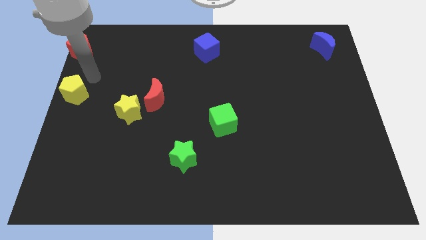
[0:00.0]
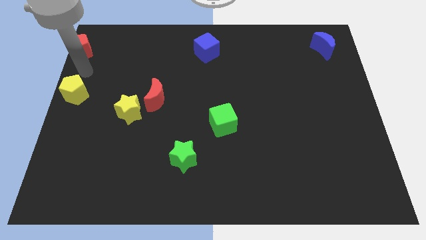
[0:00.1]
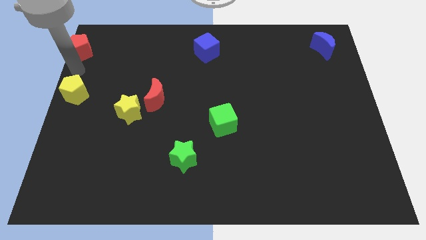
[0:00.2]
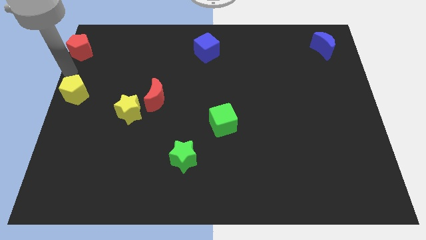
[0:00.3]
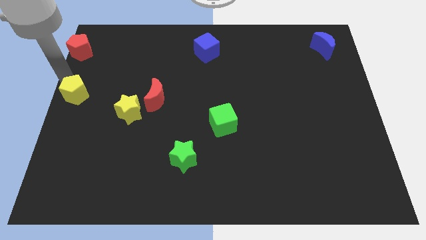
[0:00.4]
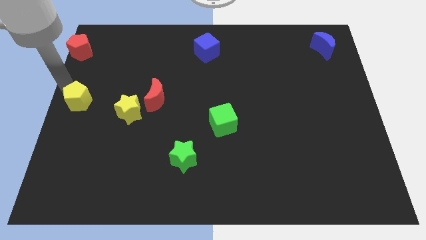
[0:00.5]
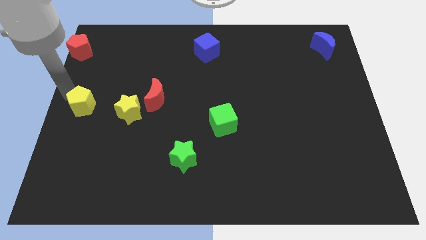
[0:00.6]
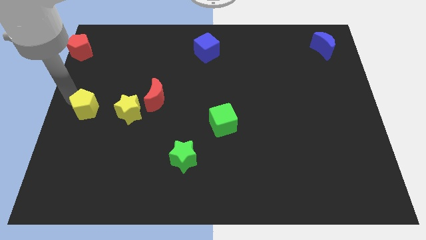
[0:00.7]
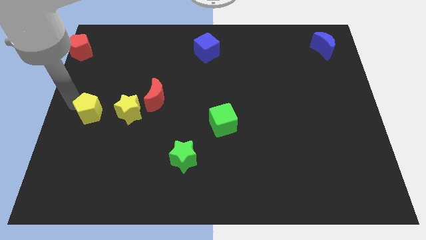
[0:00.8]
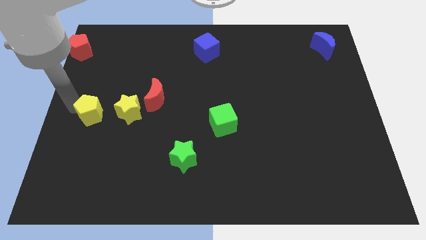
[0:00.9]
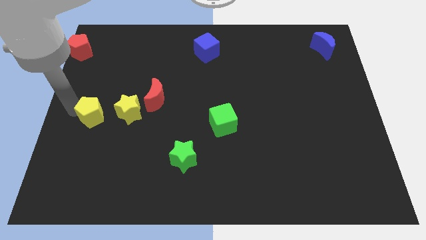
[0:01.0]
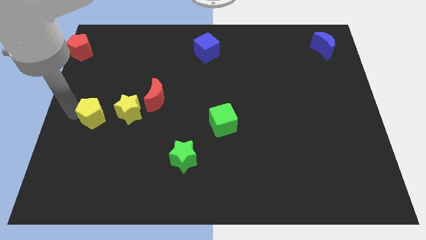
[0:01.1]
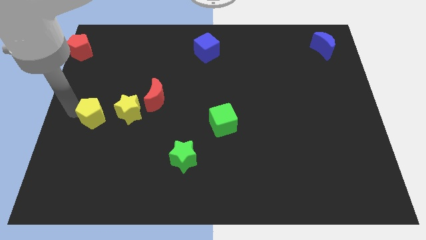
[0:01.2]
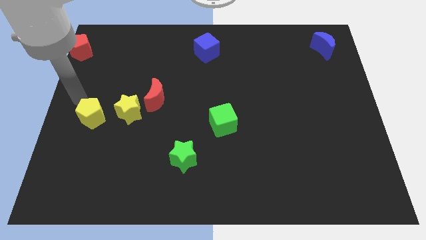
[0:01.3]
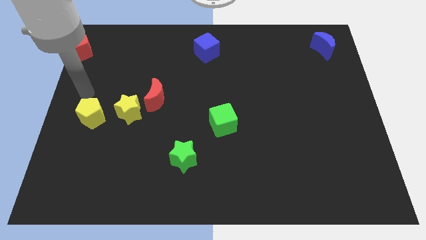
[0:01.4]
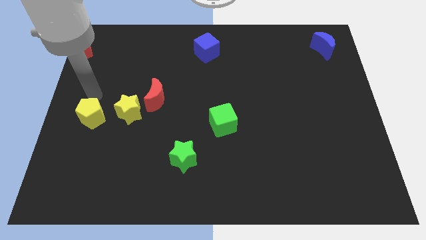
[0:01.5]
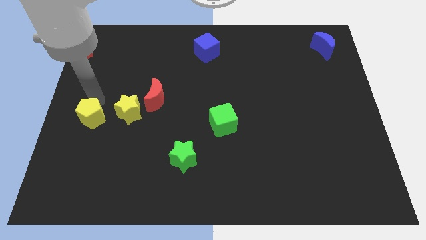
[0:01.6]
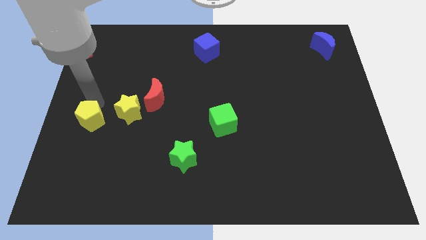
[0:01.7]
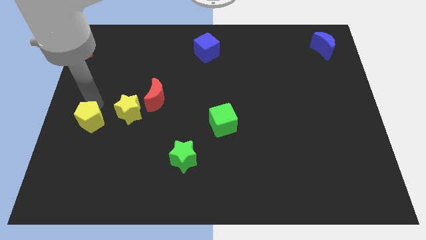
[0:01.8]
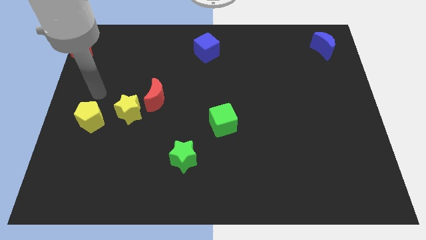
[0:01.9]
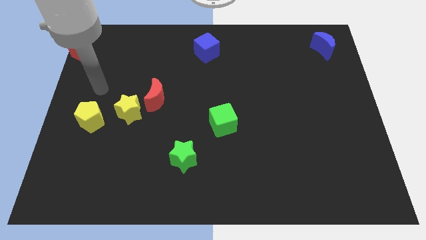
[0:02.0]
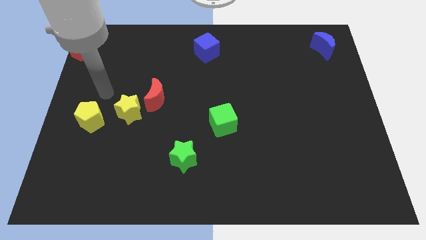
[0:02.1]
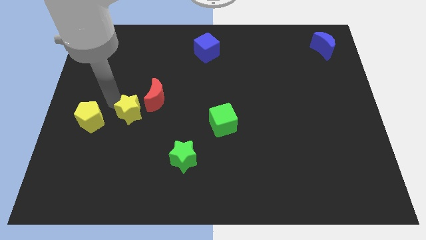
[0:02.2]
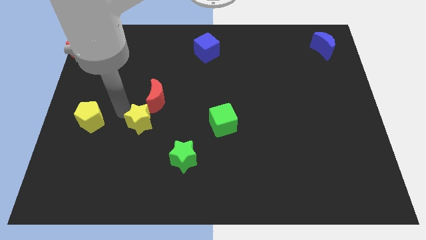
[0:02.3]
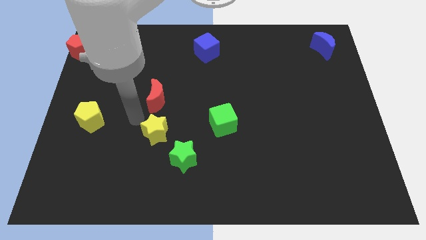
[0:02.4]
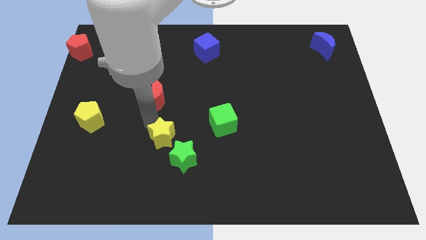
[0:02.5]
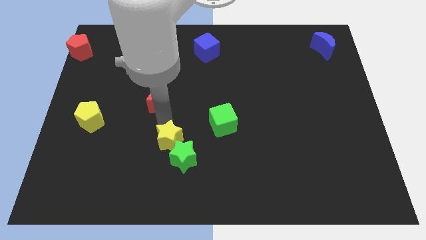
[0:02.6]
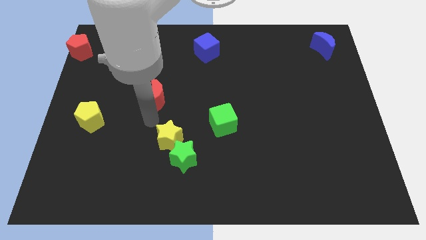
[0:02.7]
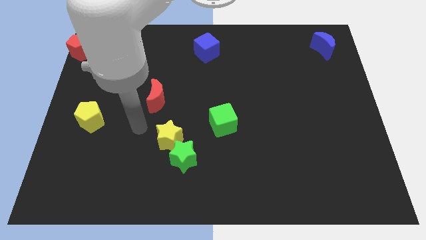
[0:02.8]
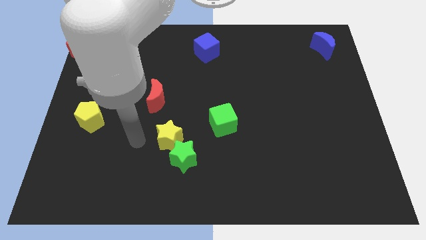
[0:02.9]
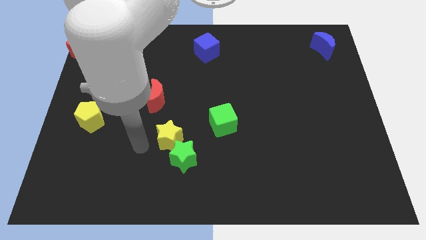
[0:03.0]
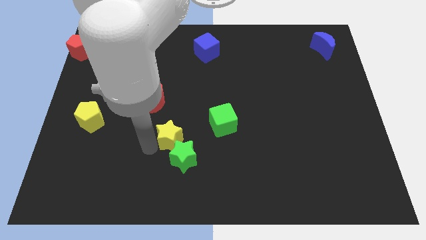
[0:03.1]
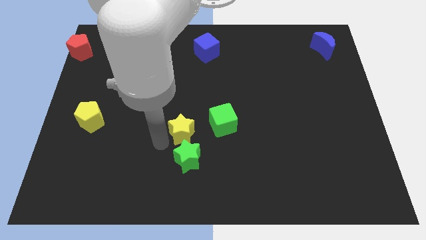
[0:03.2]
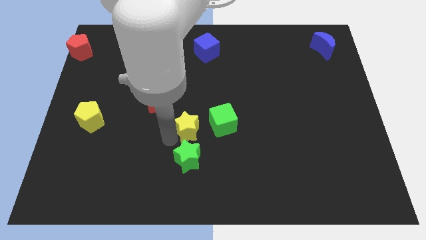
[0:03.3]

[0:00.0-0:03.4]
push yellow star into the green star

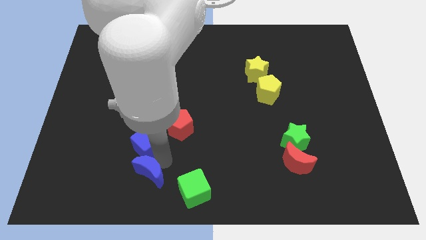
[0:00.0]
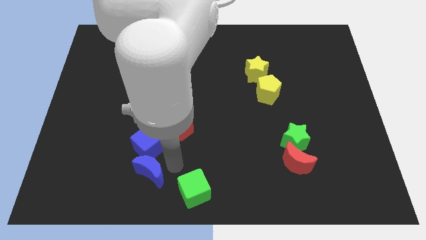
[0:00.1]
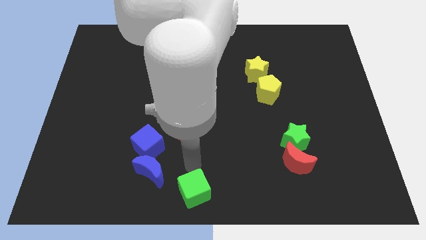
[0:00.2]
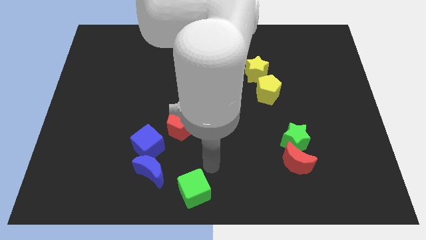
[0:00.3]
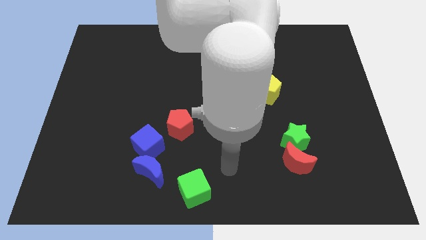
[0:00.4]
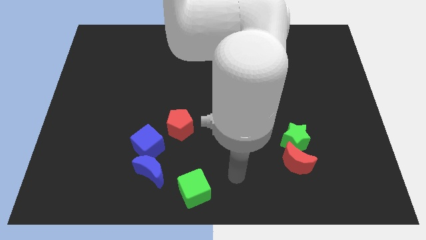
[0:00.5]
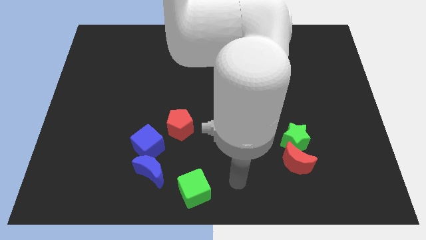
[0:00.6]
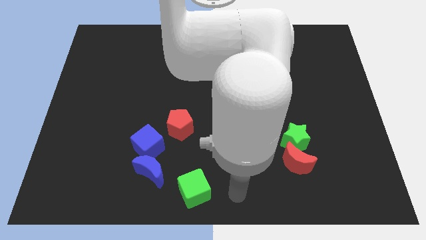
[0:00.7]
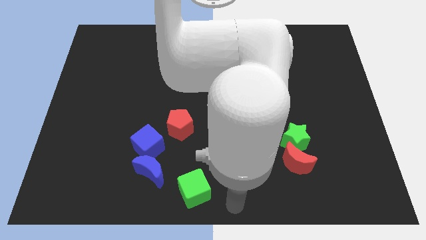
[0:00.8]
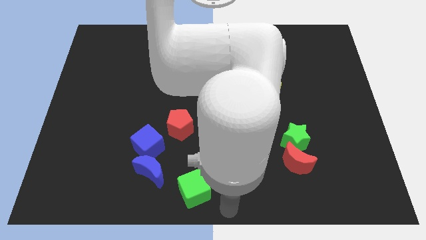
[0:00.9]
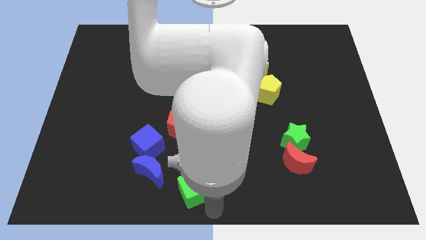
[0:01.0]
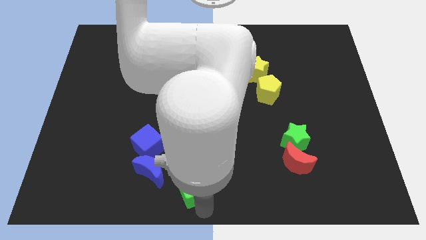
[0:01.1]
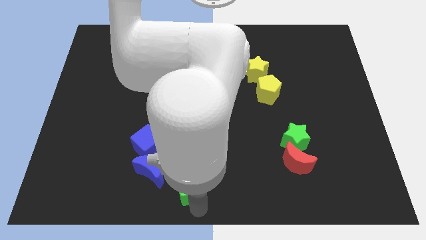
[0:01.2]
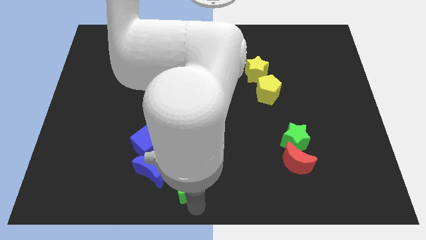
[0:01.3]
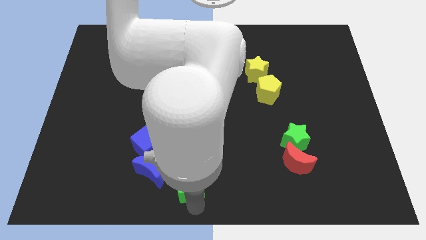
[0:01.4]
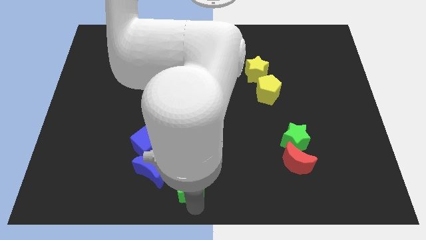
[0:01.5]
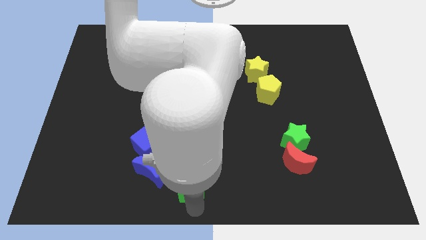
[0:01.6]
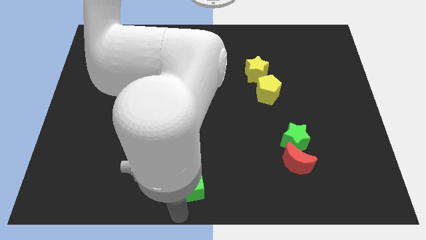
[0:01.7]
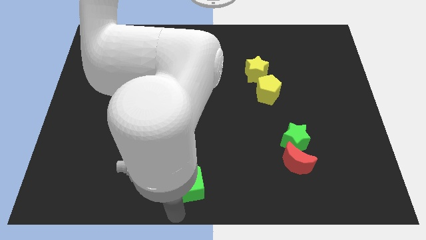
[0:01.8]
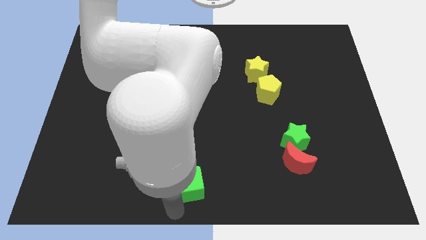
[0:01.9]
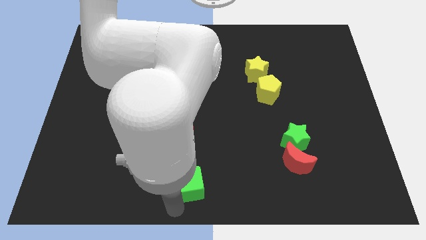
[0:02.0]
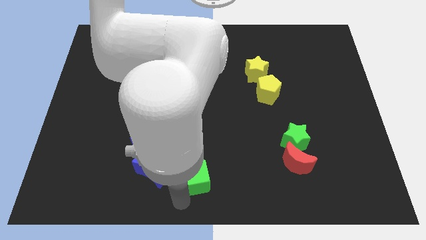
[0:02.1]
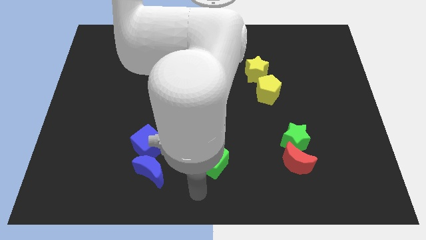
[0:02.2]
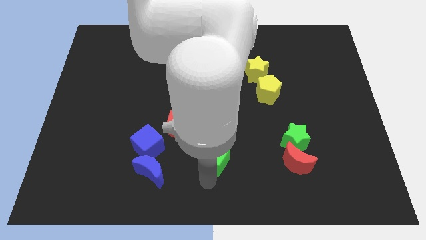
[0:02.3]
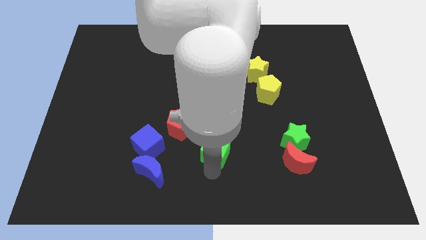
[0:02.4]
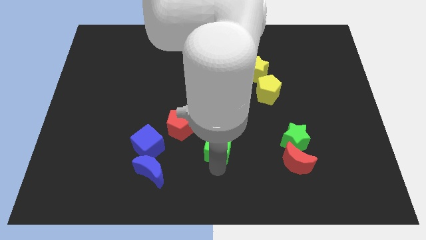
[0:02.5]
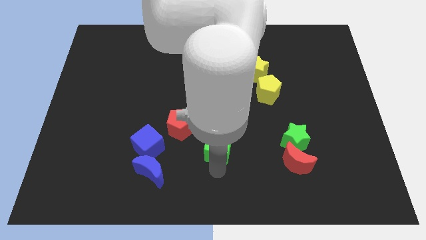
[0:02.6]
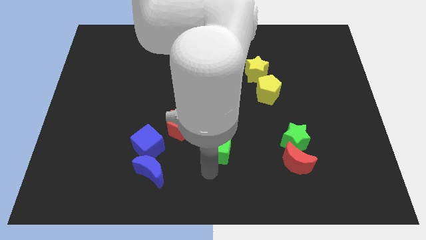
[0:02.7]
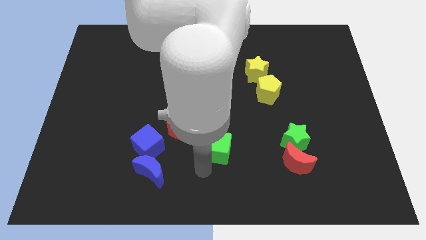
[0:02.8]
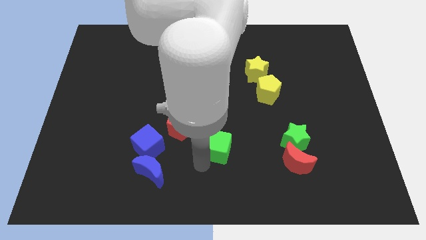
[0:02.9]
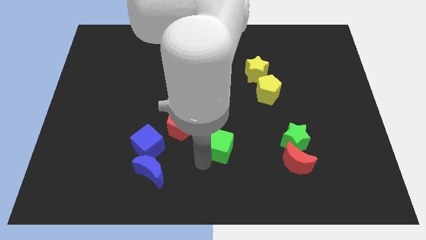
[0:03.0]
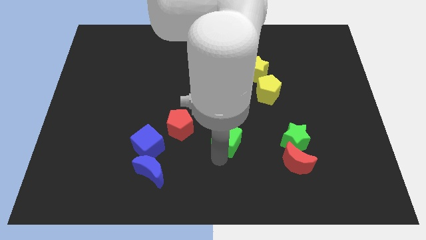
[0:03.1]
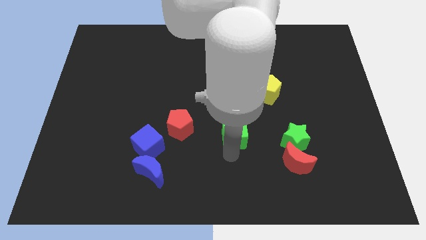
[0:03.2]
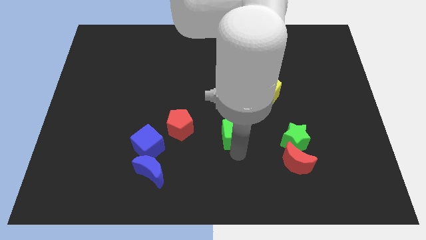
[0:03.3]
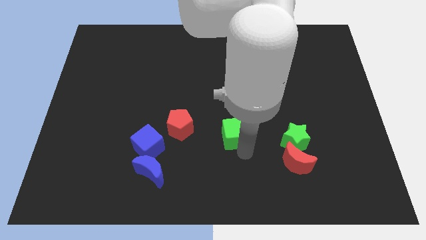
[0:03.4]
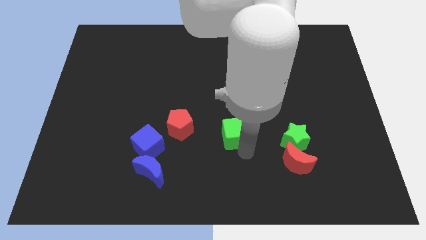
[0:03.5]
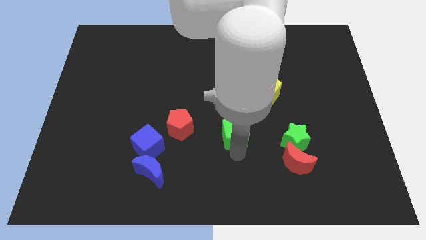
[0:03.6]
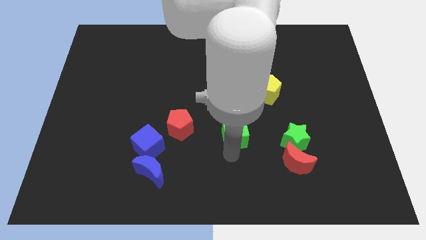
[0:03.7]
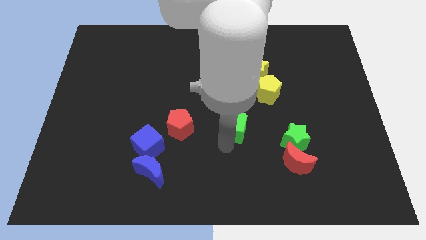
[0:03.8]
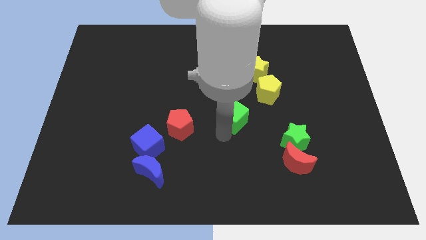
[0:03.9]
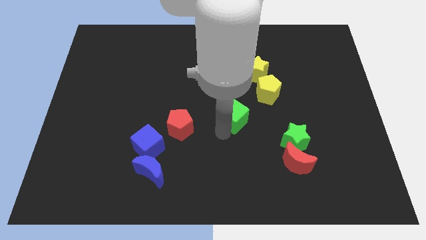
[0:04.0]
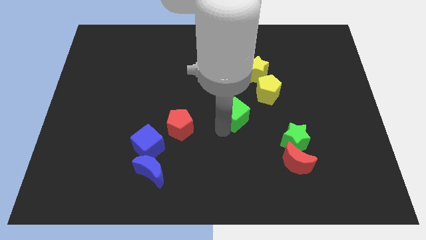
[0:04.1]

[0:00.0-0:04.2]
move the green cube to the right of the red pentagon

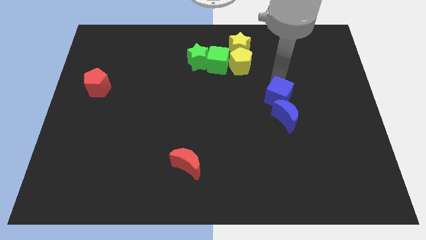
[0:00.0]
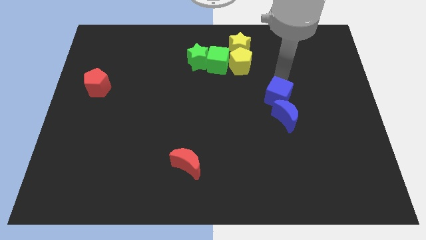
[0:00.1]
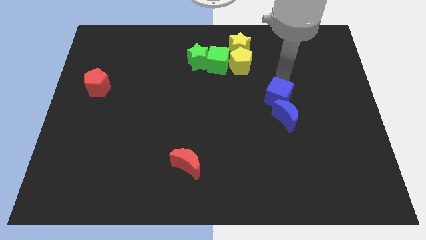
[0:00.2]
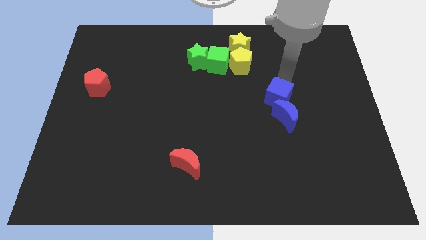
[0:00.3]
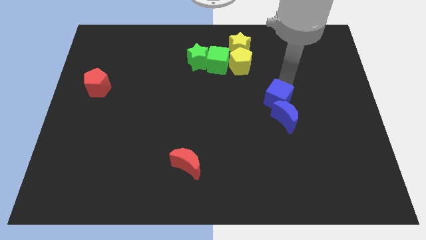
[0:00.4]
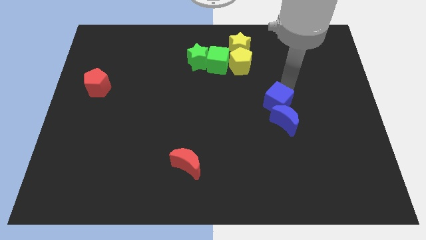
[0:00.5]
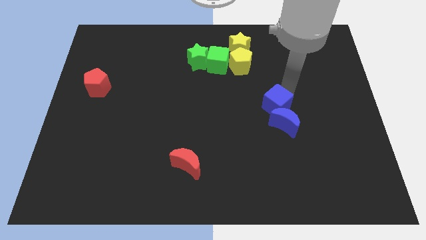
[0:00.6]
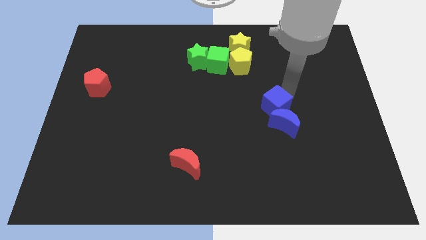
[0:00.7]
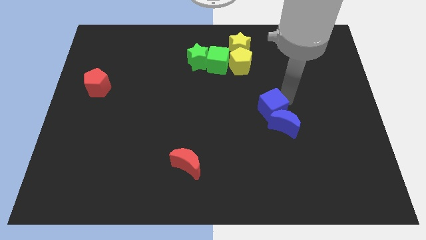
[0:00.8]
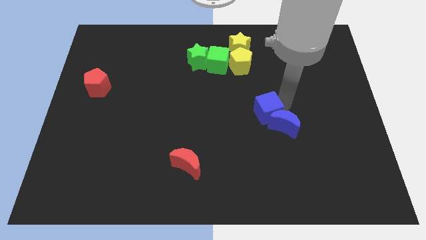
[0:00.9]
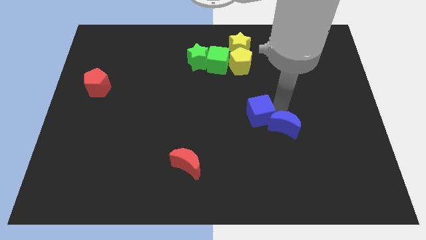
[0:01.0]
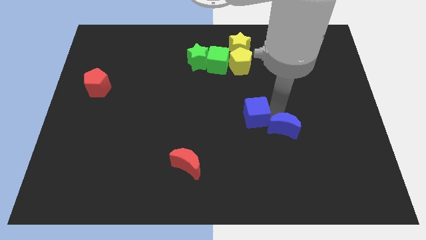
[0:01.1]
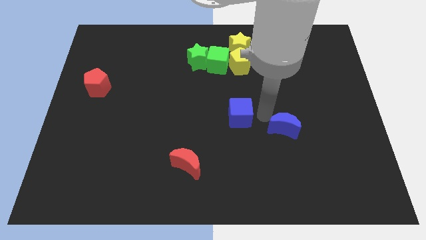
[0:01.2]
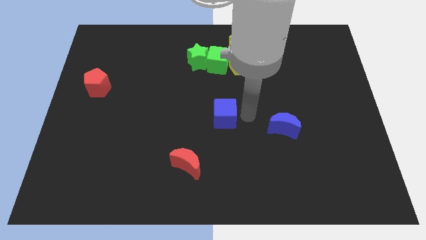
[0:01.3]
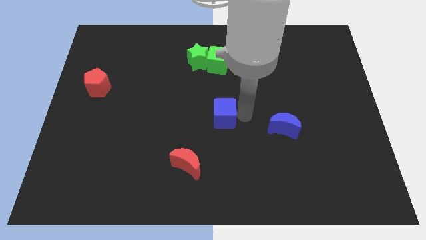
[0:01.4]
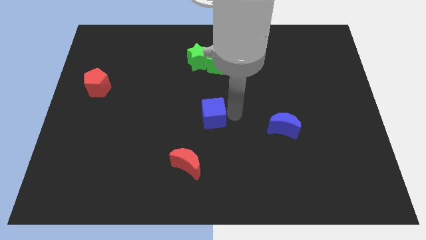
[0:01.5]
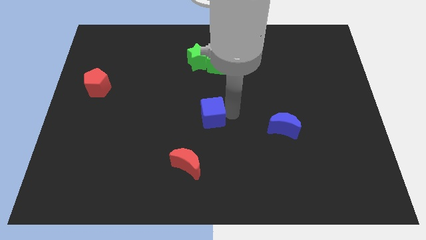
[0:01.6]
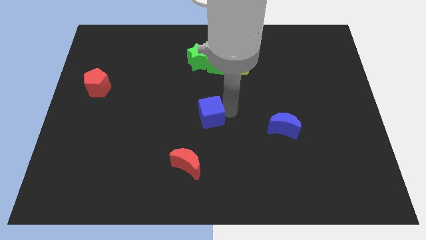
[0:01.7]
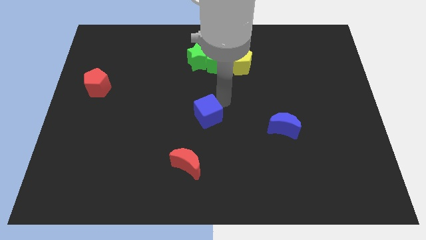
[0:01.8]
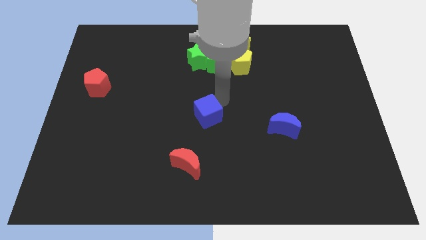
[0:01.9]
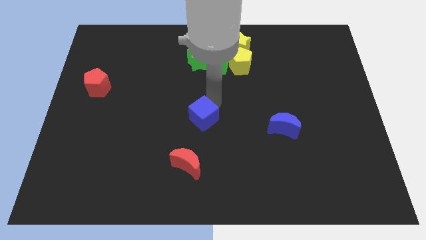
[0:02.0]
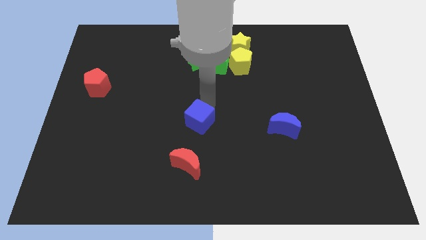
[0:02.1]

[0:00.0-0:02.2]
separate the blue cube towards bottom of green blocks
